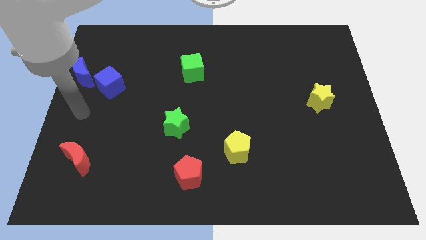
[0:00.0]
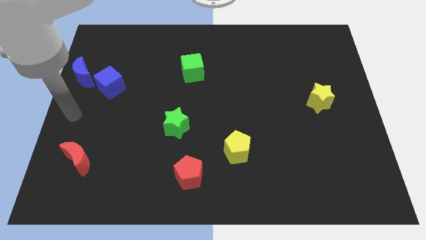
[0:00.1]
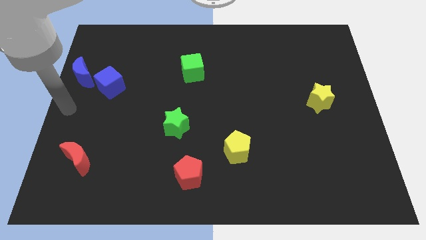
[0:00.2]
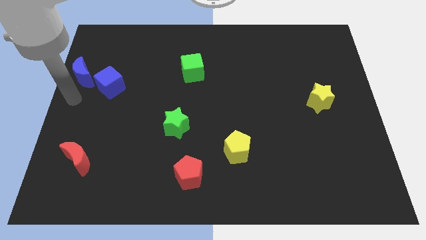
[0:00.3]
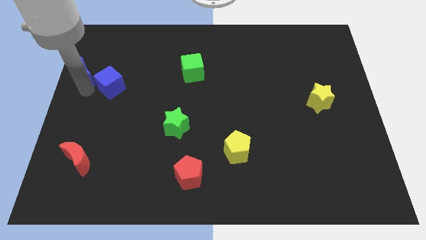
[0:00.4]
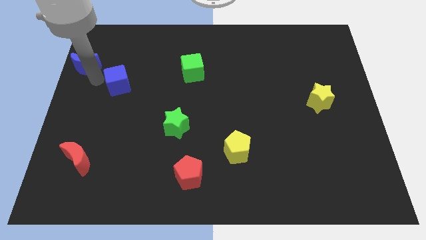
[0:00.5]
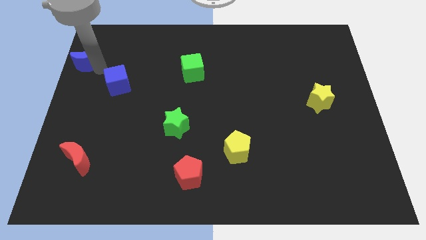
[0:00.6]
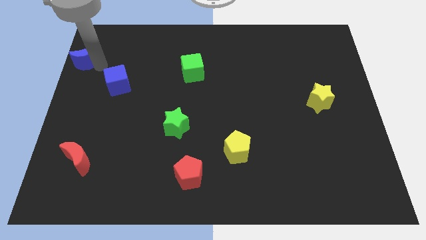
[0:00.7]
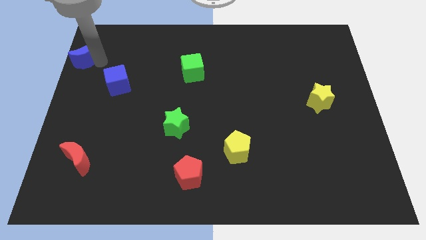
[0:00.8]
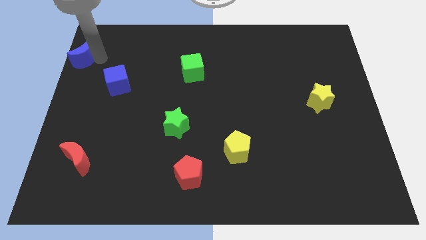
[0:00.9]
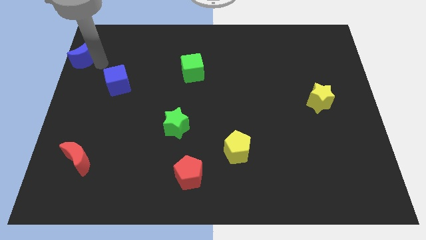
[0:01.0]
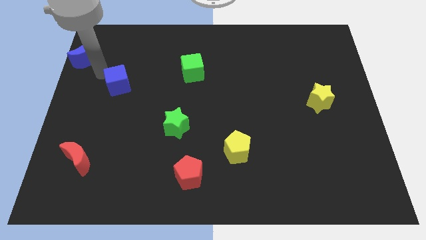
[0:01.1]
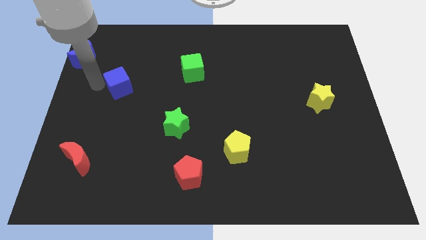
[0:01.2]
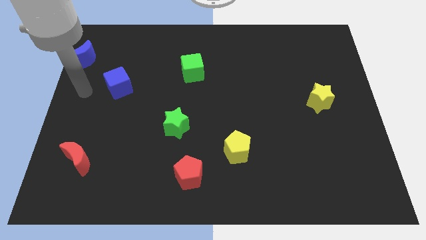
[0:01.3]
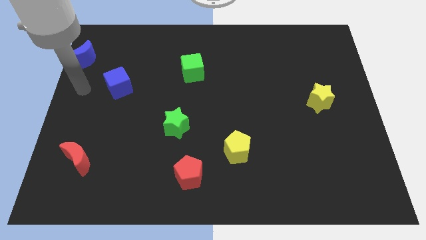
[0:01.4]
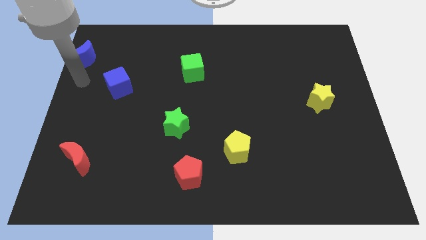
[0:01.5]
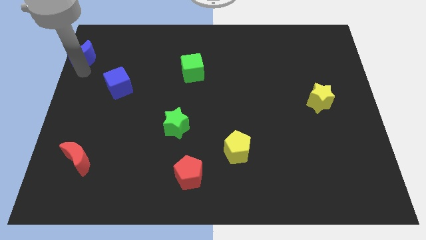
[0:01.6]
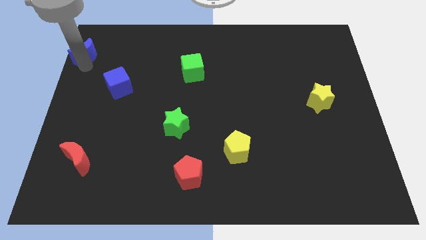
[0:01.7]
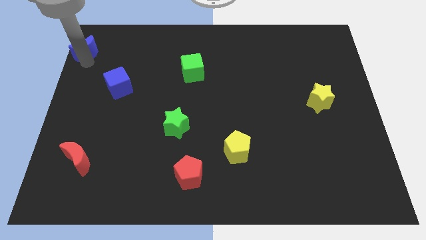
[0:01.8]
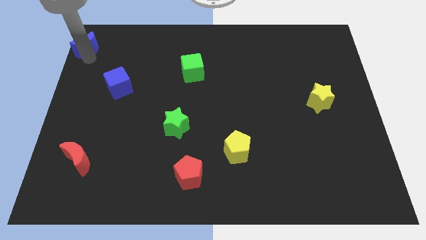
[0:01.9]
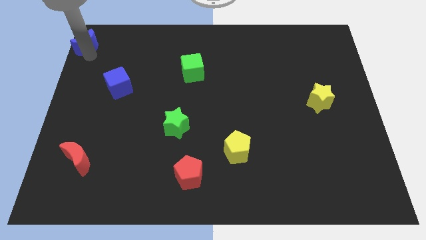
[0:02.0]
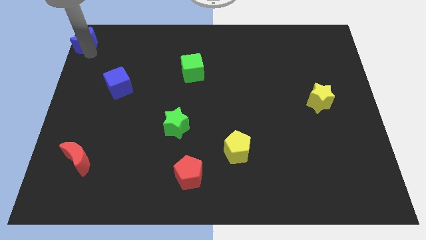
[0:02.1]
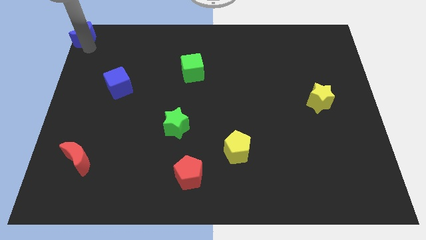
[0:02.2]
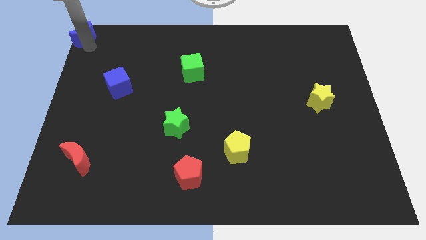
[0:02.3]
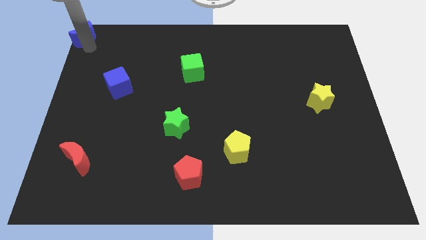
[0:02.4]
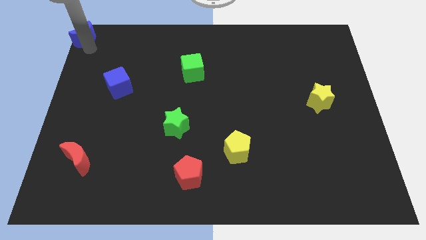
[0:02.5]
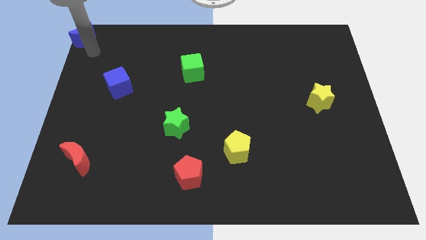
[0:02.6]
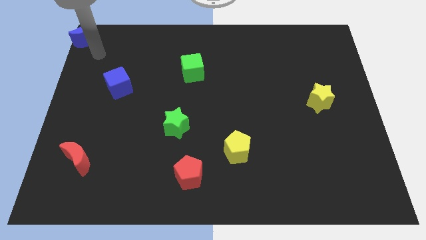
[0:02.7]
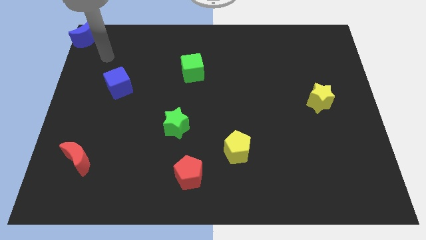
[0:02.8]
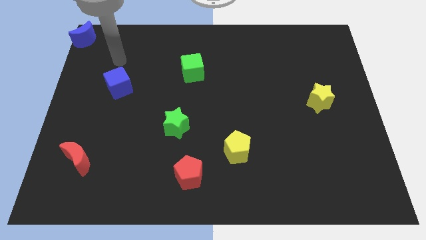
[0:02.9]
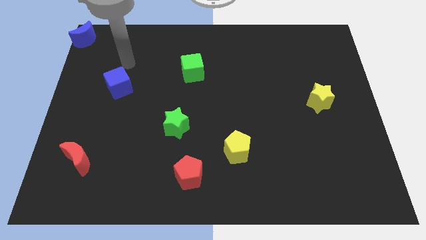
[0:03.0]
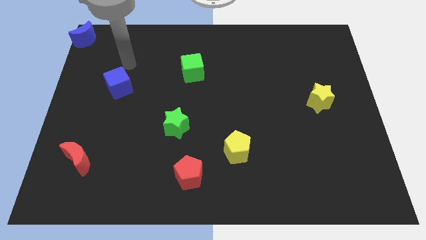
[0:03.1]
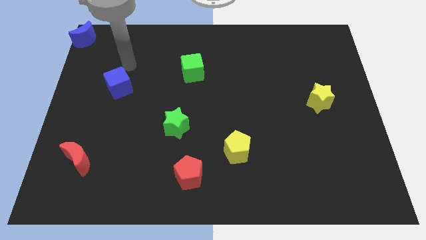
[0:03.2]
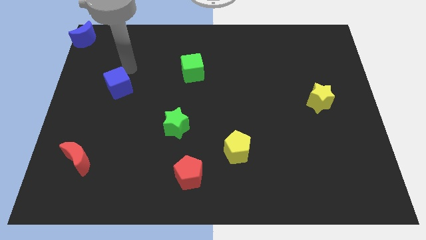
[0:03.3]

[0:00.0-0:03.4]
place the blue crescent to the top left corner of the board

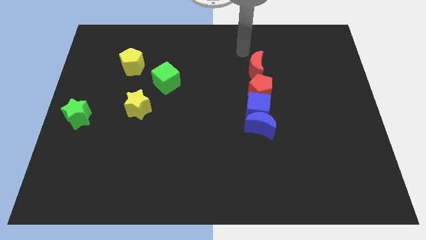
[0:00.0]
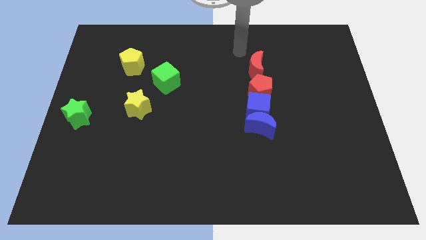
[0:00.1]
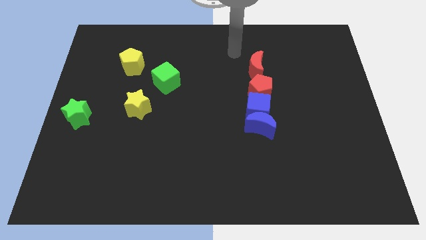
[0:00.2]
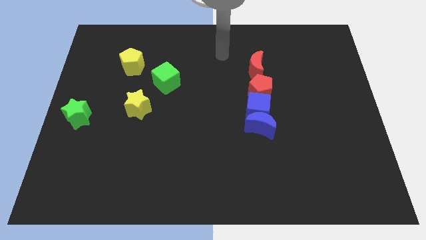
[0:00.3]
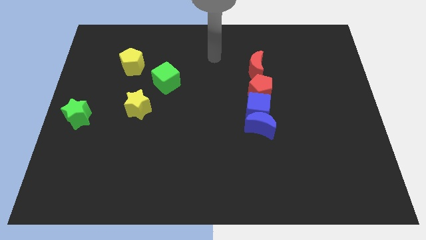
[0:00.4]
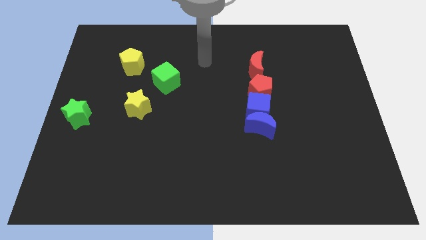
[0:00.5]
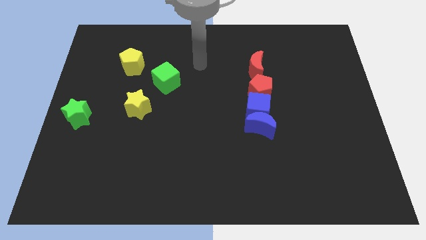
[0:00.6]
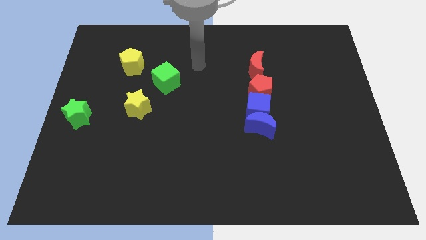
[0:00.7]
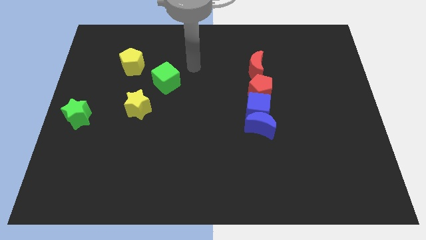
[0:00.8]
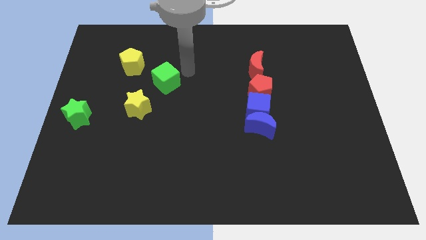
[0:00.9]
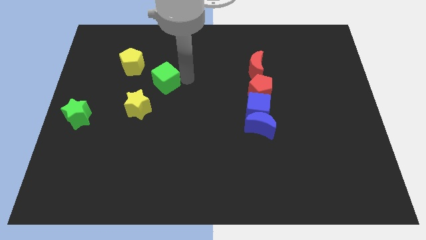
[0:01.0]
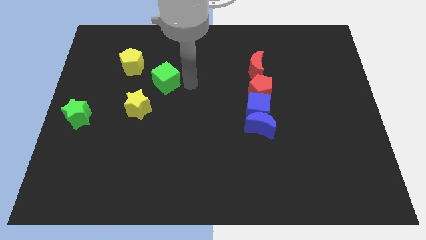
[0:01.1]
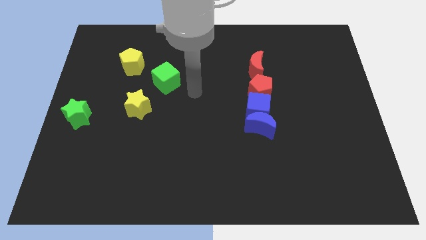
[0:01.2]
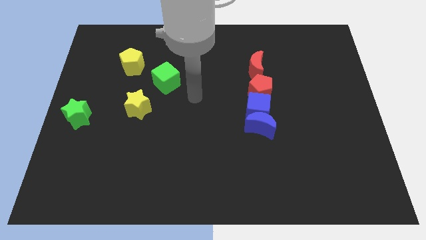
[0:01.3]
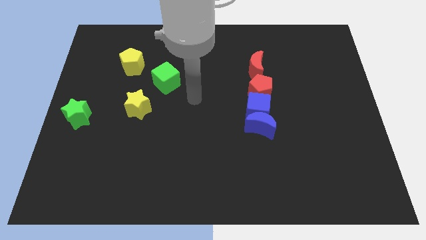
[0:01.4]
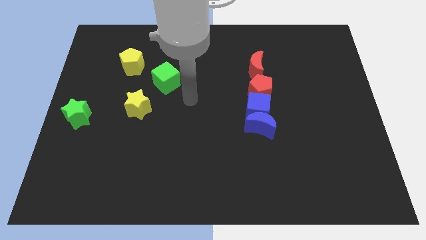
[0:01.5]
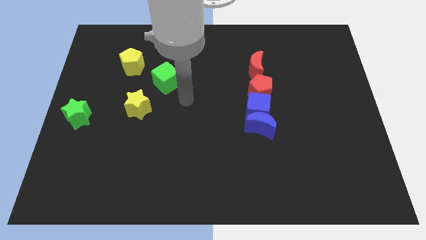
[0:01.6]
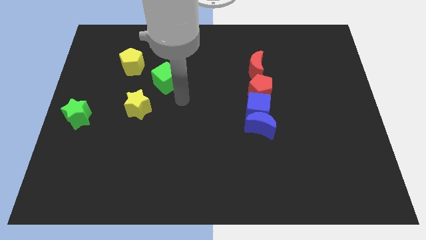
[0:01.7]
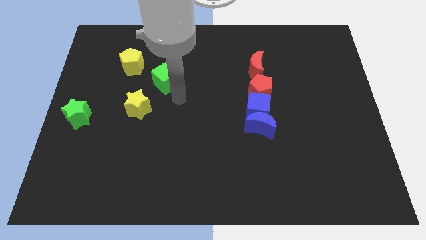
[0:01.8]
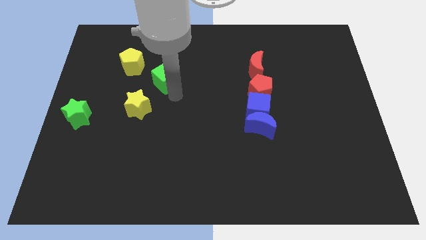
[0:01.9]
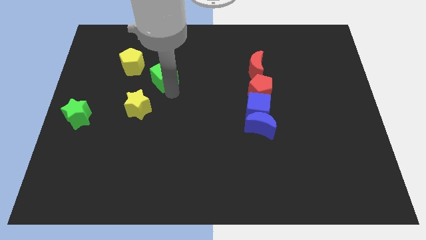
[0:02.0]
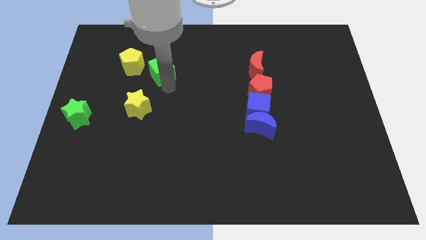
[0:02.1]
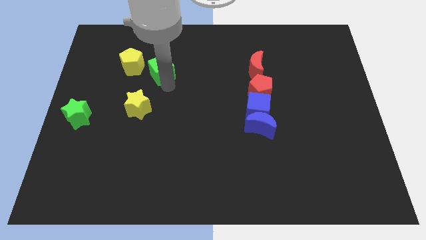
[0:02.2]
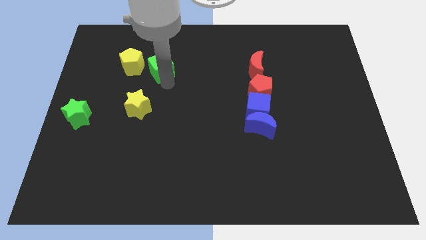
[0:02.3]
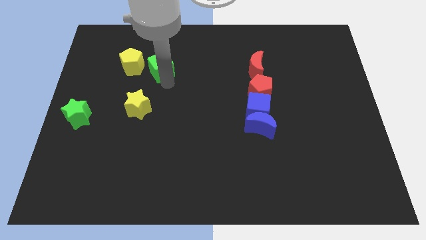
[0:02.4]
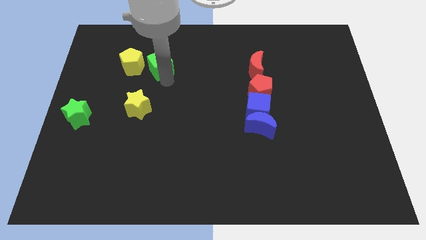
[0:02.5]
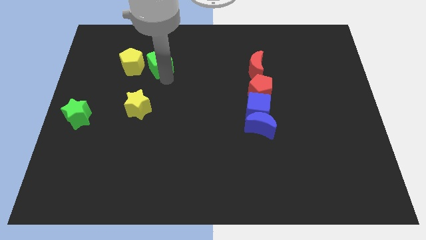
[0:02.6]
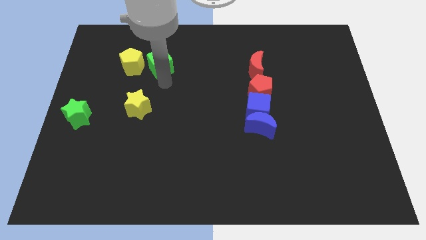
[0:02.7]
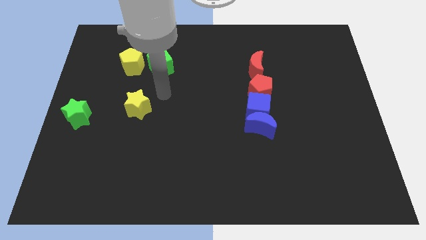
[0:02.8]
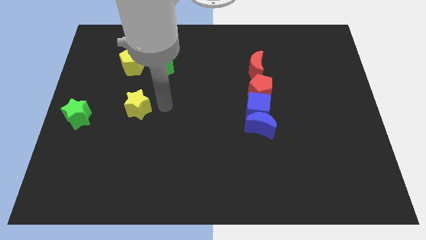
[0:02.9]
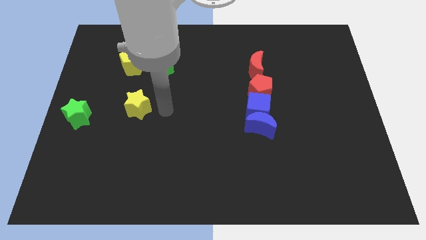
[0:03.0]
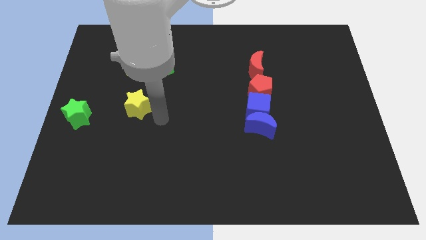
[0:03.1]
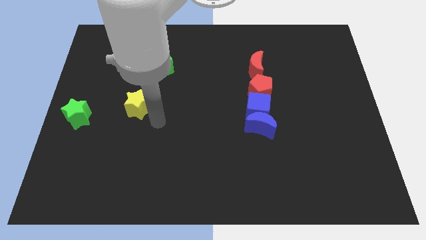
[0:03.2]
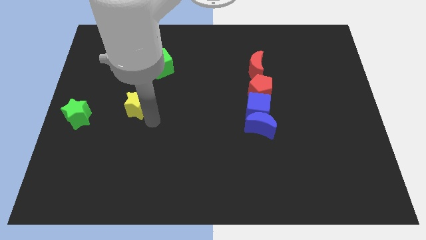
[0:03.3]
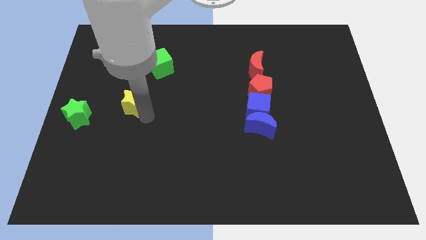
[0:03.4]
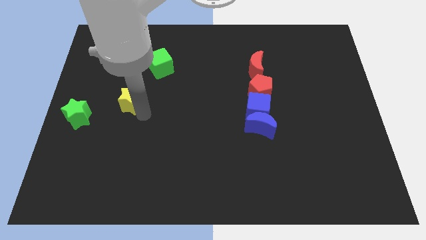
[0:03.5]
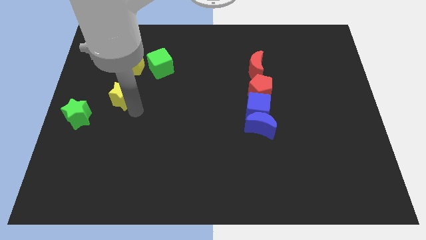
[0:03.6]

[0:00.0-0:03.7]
move the green cube to the right of the yellow pentagon

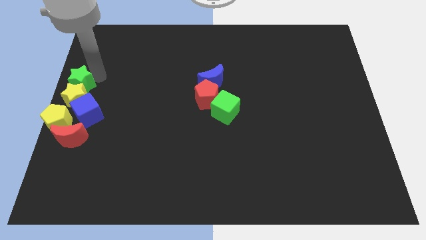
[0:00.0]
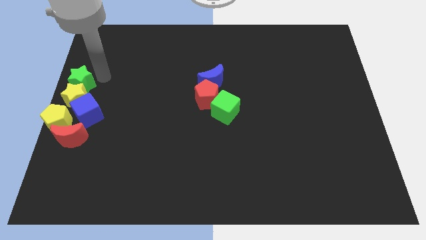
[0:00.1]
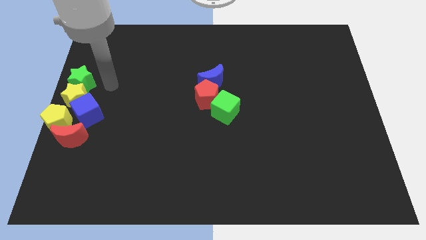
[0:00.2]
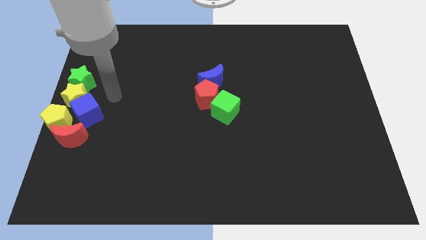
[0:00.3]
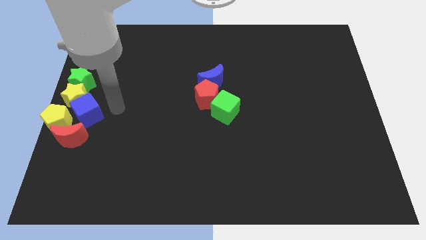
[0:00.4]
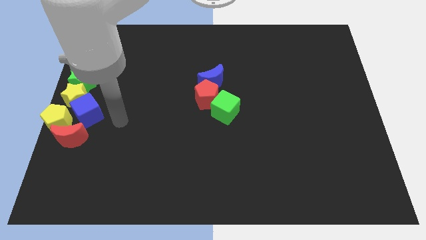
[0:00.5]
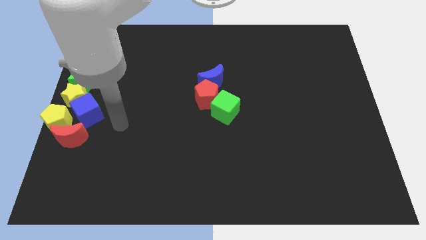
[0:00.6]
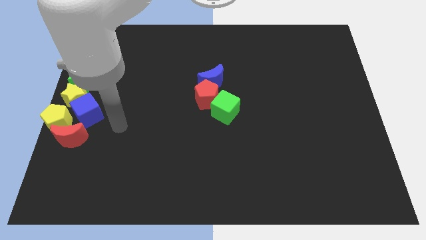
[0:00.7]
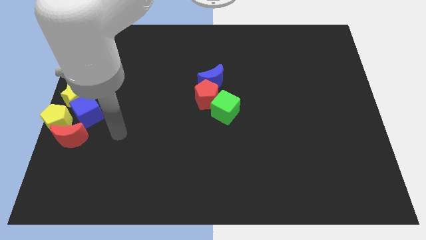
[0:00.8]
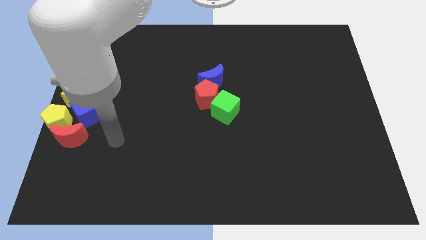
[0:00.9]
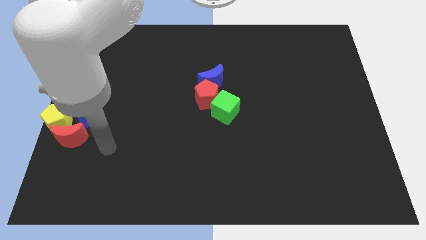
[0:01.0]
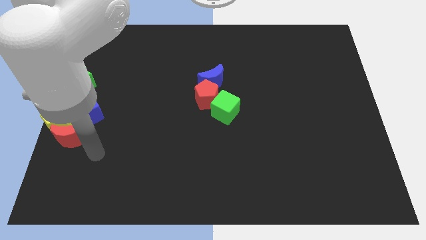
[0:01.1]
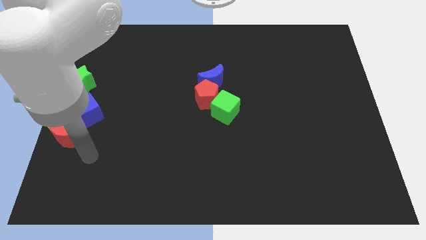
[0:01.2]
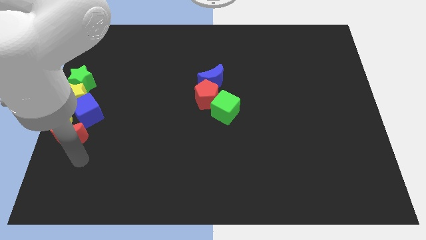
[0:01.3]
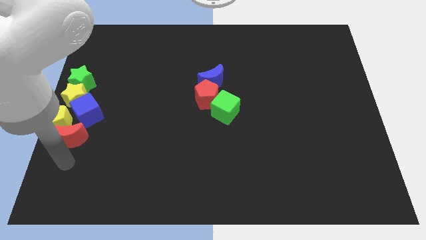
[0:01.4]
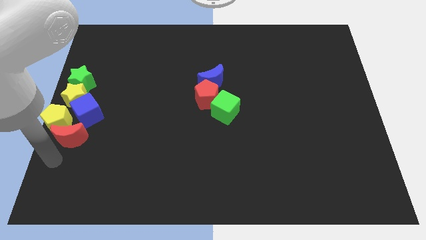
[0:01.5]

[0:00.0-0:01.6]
move the arm at the botttom of the red moon

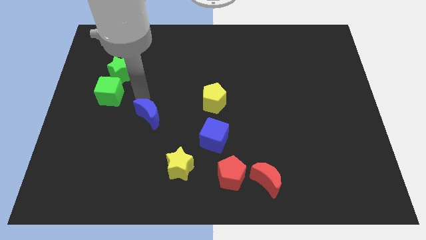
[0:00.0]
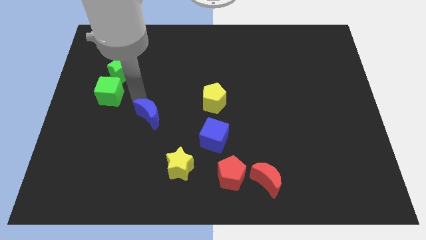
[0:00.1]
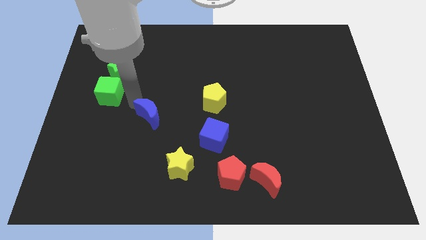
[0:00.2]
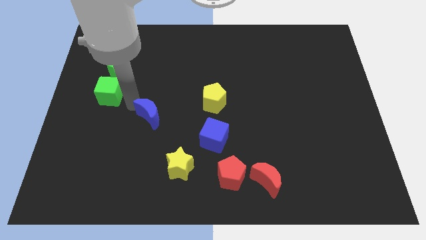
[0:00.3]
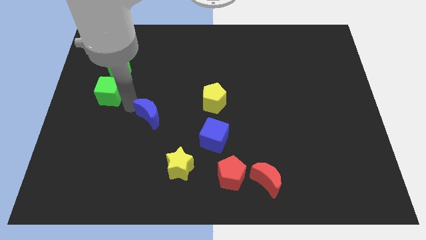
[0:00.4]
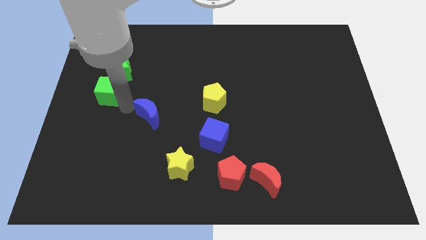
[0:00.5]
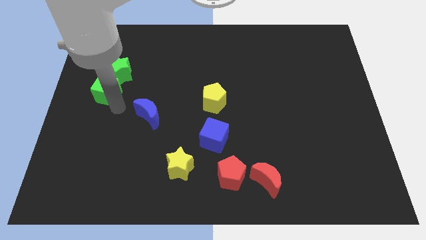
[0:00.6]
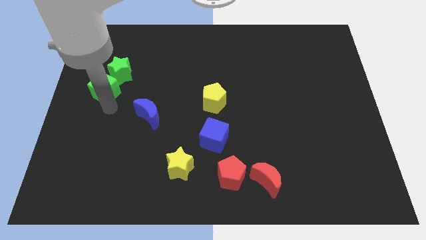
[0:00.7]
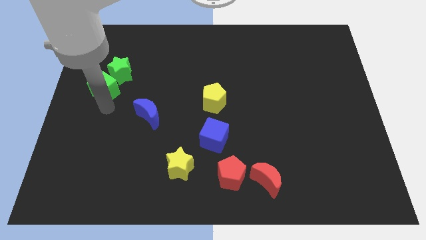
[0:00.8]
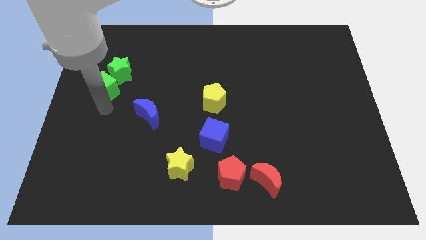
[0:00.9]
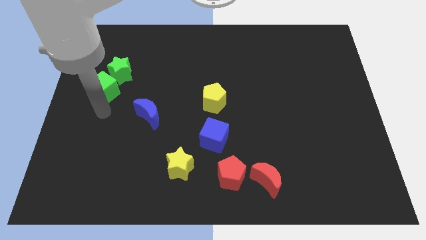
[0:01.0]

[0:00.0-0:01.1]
push the green cube slightly to the left
